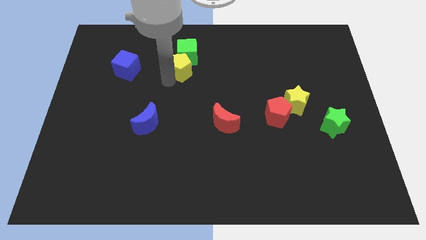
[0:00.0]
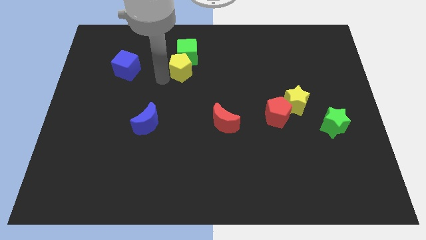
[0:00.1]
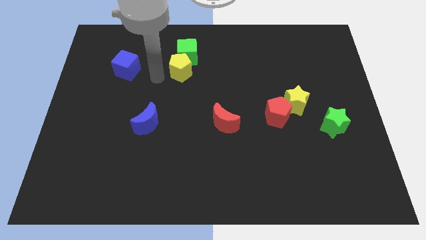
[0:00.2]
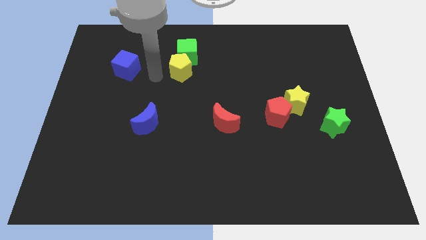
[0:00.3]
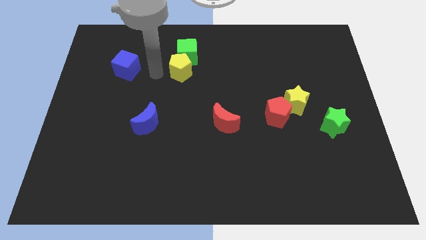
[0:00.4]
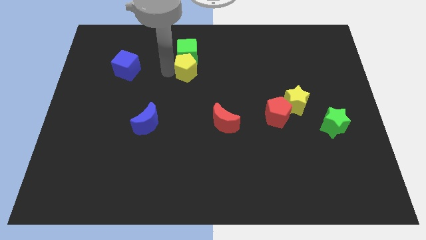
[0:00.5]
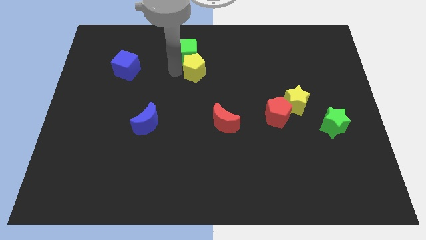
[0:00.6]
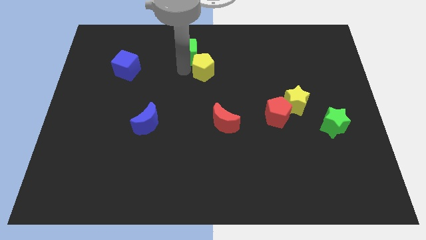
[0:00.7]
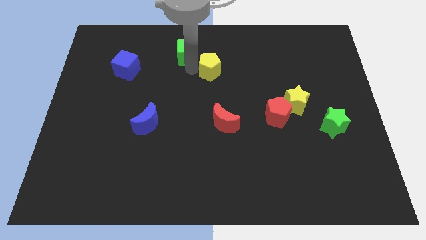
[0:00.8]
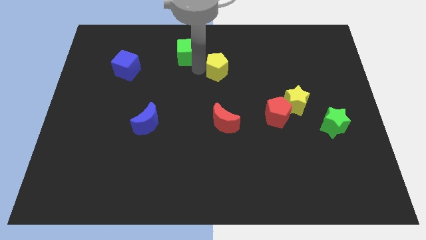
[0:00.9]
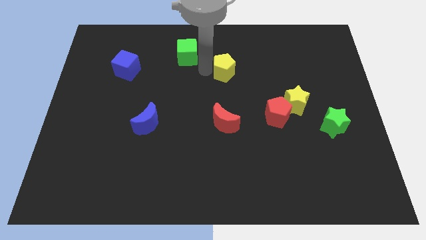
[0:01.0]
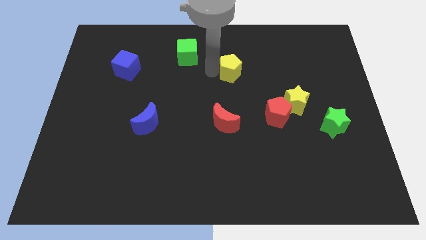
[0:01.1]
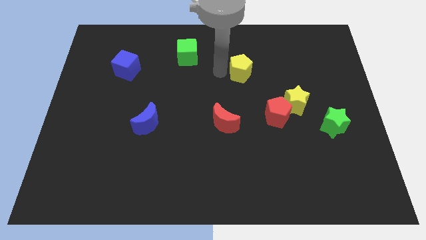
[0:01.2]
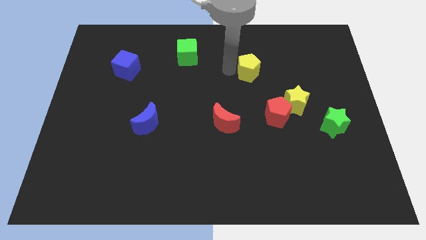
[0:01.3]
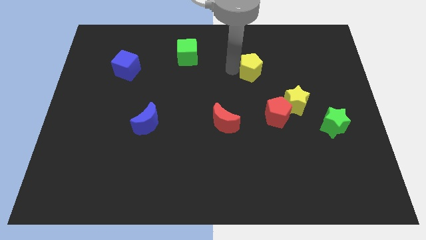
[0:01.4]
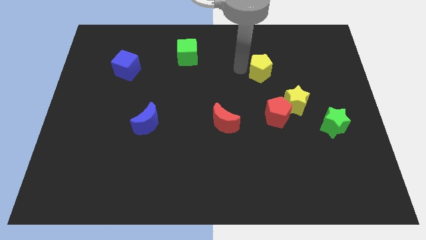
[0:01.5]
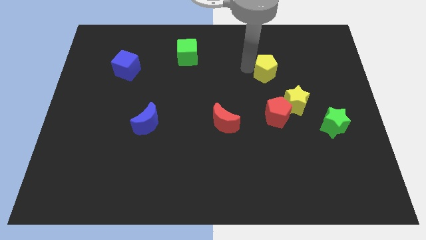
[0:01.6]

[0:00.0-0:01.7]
move the yellow pentagon to the top of the red pentagon

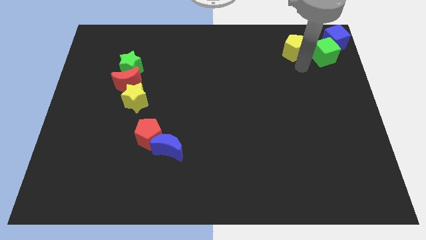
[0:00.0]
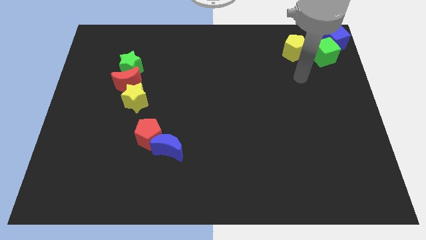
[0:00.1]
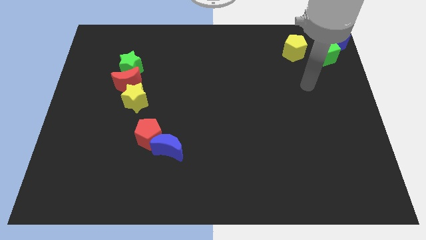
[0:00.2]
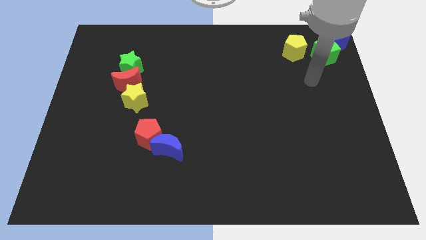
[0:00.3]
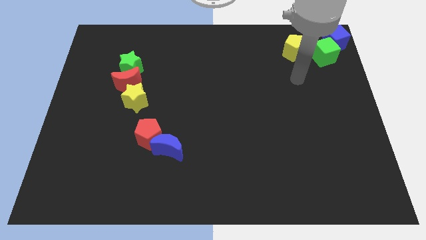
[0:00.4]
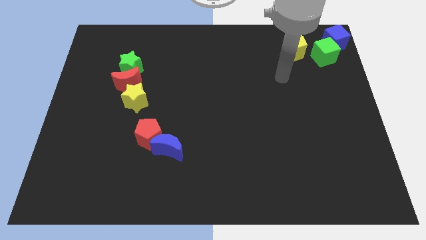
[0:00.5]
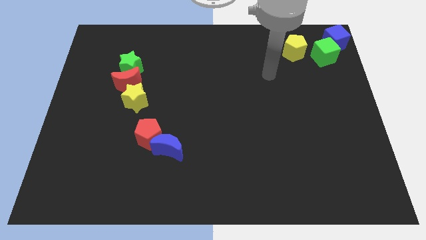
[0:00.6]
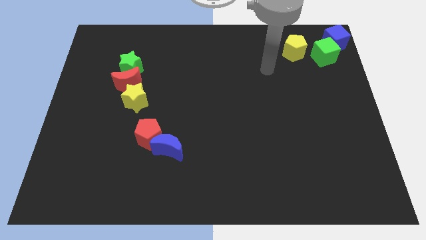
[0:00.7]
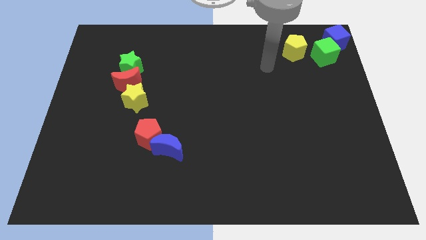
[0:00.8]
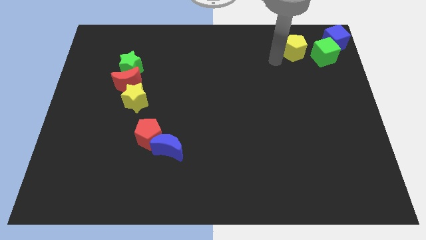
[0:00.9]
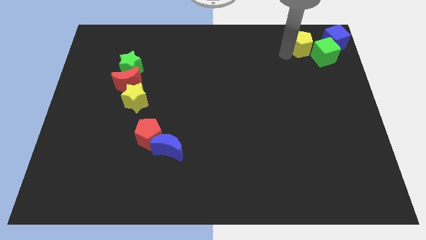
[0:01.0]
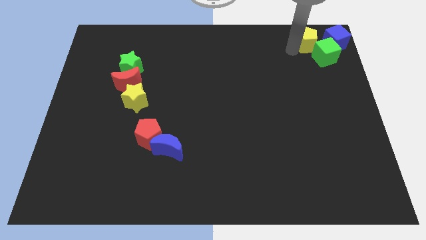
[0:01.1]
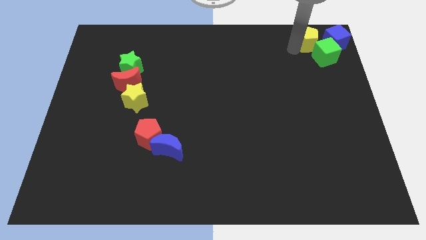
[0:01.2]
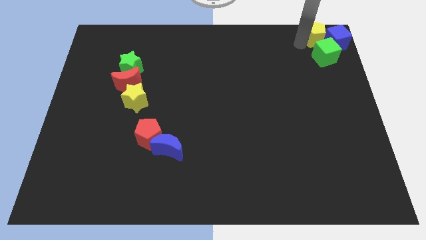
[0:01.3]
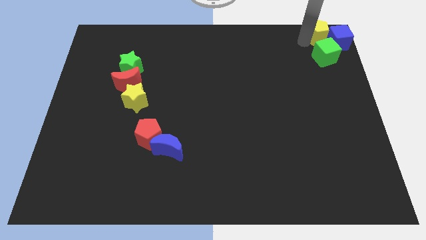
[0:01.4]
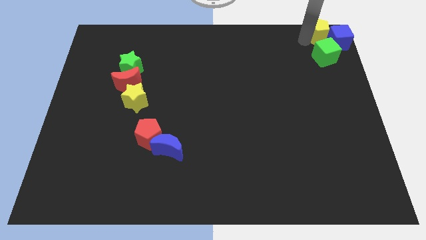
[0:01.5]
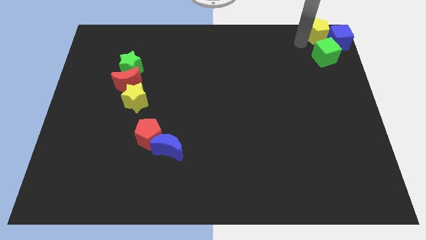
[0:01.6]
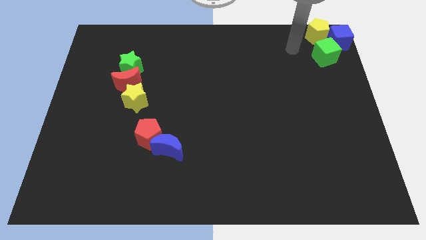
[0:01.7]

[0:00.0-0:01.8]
push the yellow pentagon to the top of the green cube

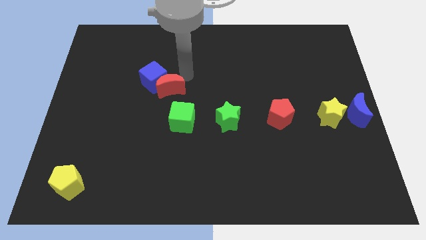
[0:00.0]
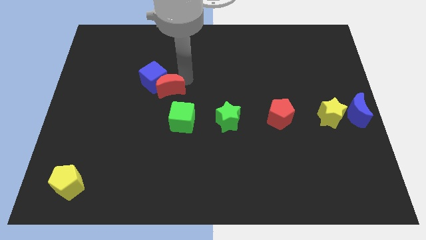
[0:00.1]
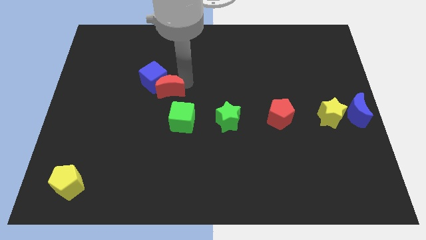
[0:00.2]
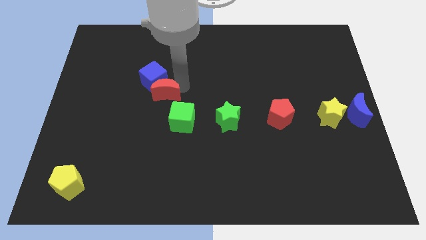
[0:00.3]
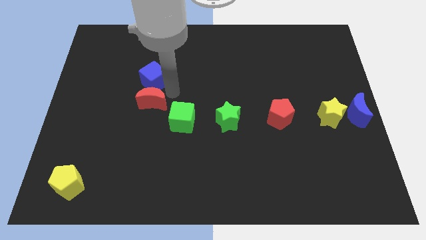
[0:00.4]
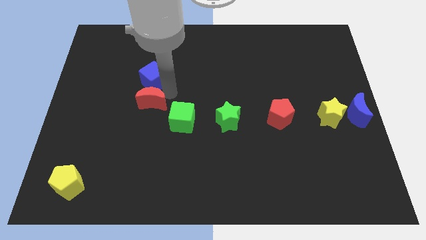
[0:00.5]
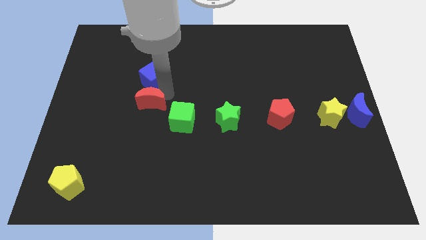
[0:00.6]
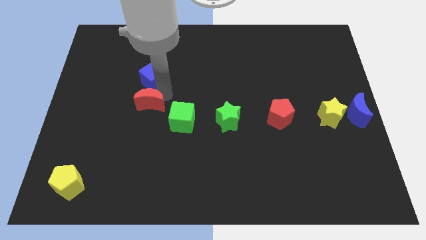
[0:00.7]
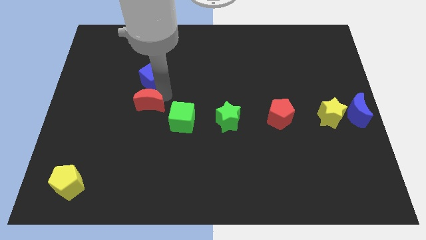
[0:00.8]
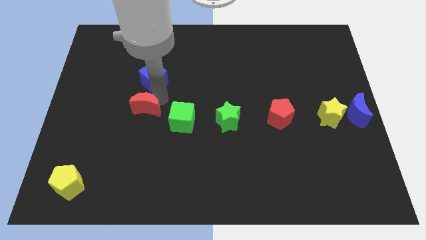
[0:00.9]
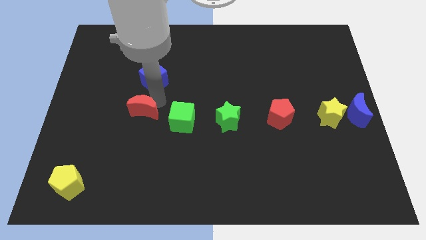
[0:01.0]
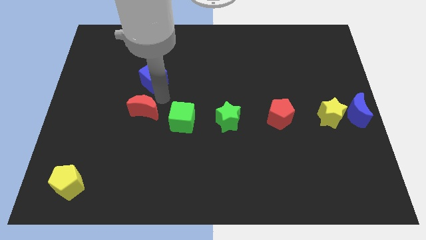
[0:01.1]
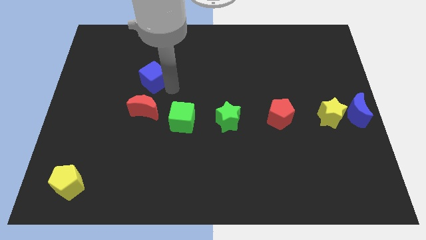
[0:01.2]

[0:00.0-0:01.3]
separate the red crescent from the blue cube

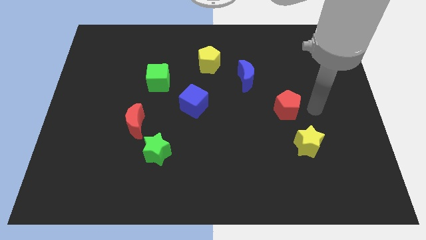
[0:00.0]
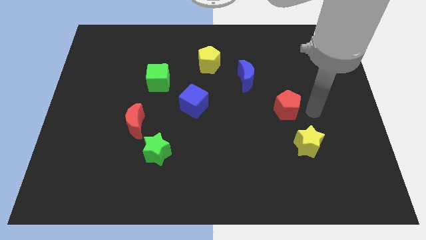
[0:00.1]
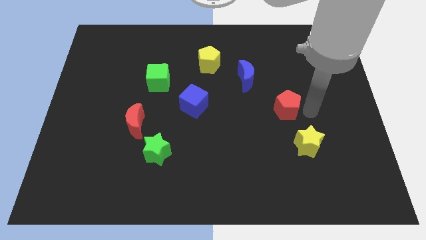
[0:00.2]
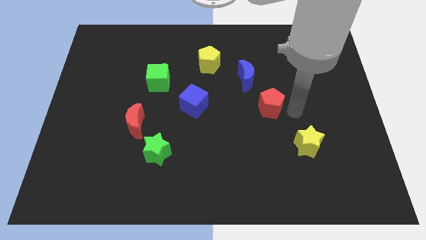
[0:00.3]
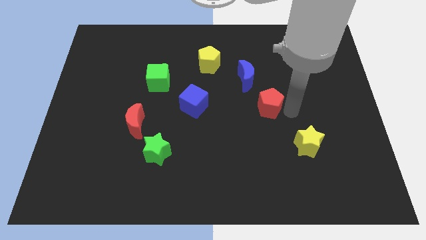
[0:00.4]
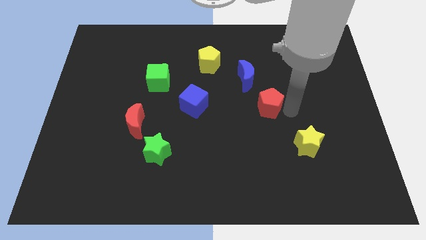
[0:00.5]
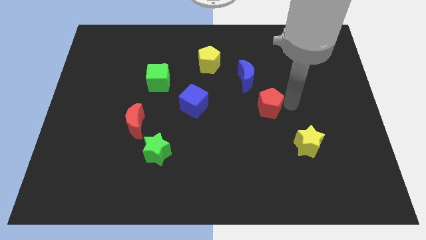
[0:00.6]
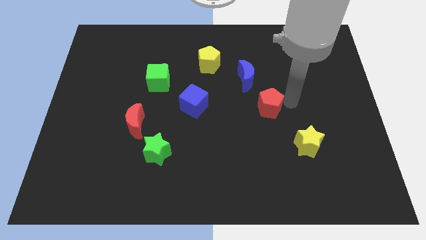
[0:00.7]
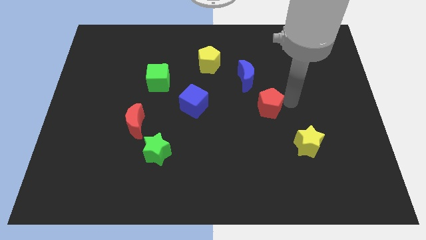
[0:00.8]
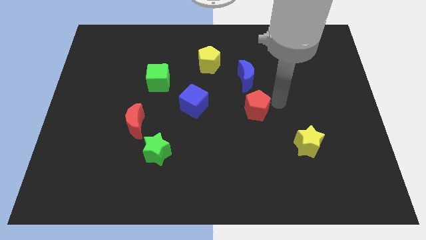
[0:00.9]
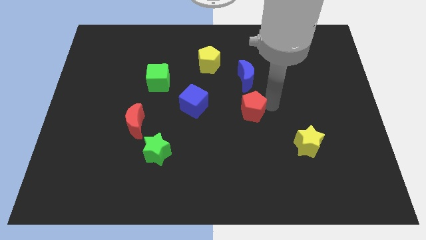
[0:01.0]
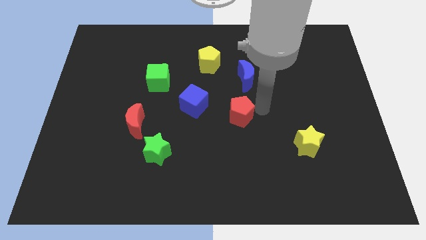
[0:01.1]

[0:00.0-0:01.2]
push the red pentagon to the bottom side of the blue moon

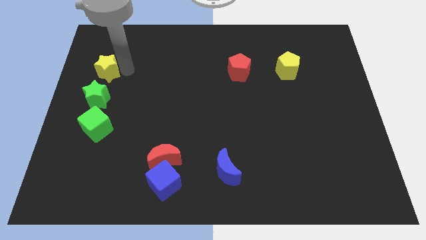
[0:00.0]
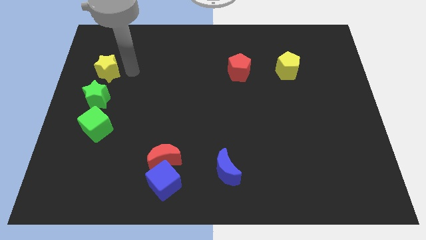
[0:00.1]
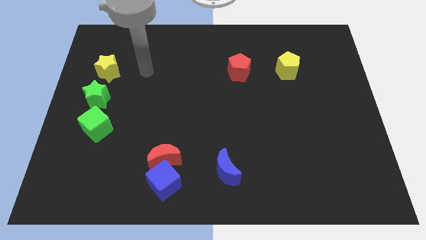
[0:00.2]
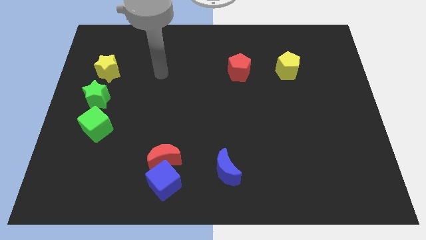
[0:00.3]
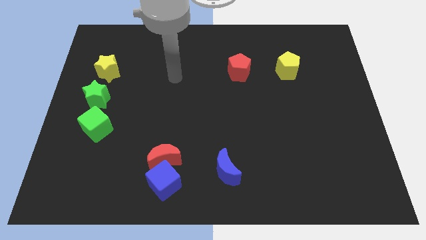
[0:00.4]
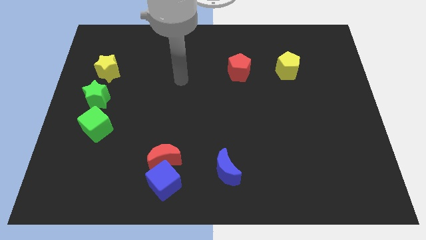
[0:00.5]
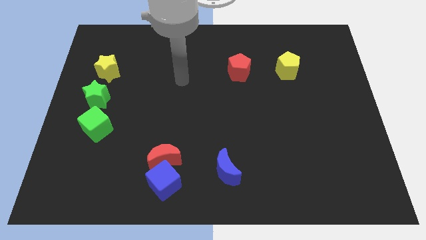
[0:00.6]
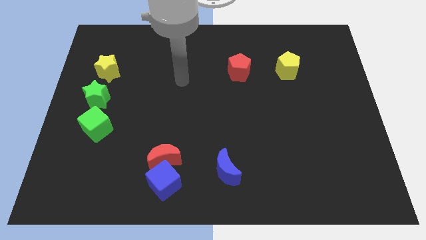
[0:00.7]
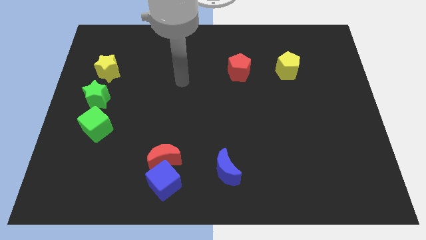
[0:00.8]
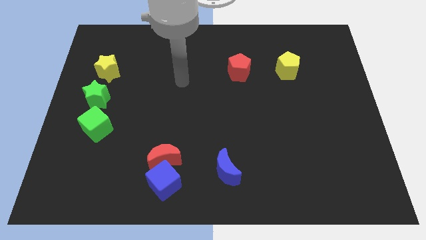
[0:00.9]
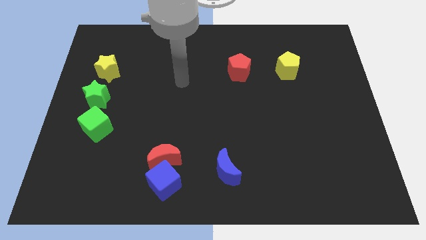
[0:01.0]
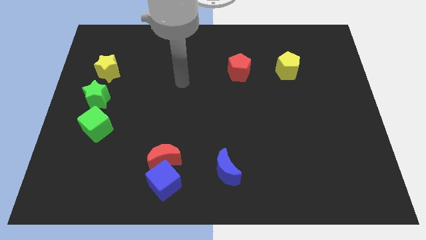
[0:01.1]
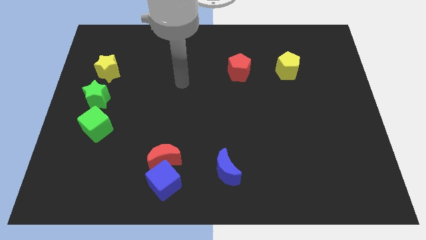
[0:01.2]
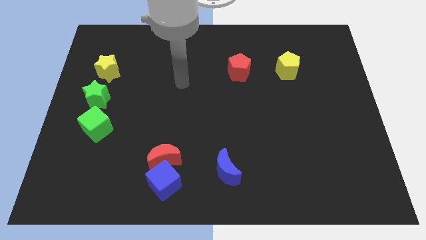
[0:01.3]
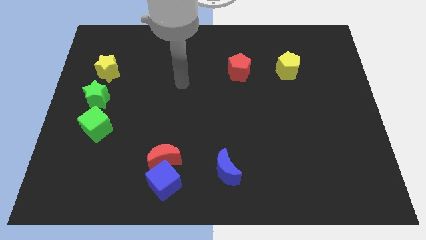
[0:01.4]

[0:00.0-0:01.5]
move your arm away from yellow star

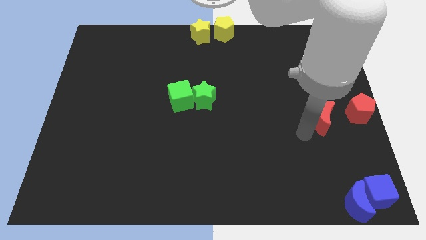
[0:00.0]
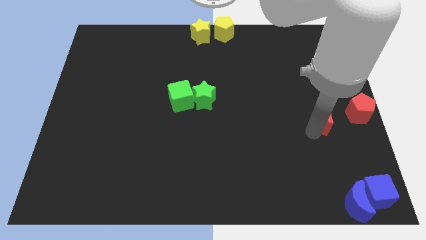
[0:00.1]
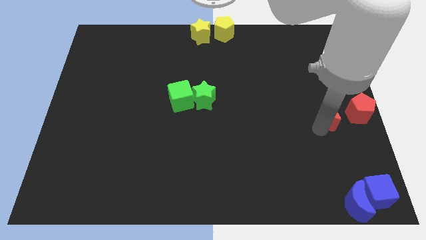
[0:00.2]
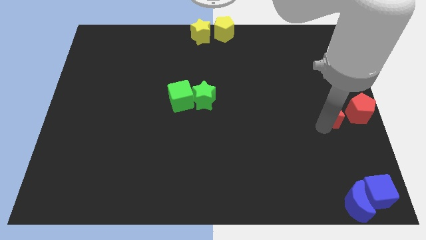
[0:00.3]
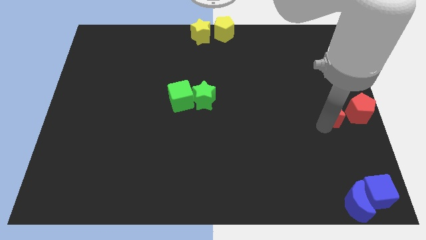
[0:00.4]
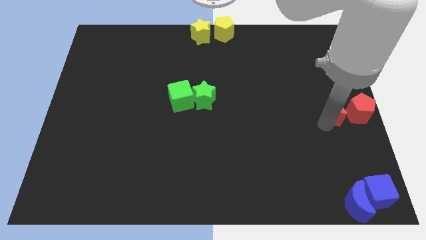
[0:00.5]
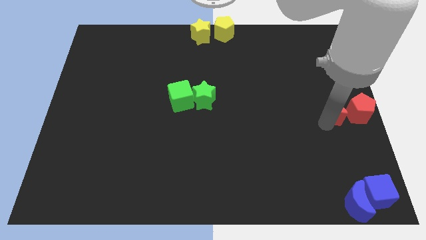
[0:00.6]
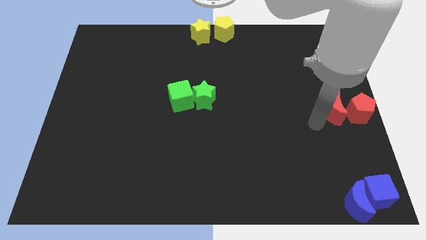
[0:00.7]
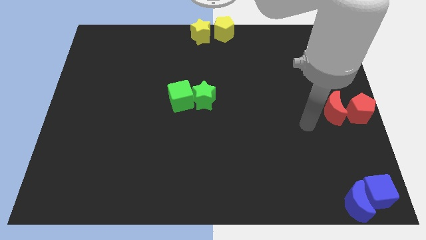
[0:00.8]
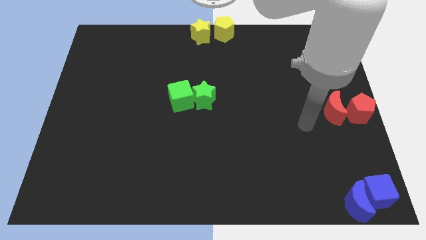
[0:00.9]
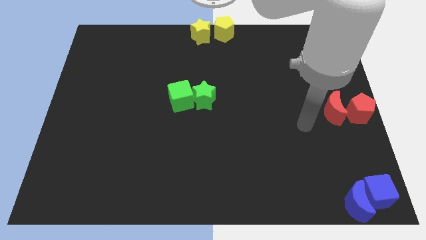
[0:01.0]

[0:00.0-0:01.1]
move the red moon slightly to the right side

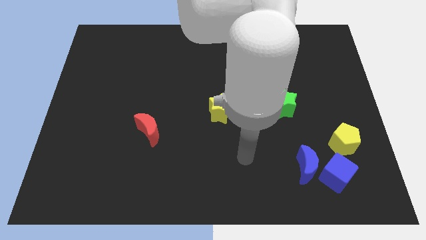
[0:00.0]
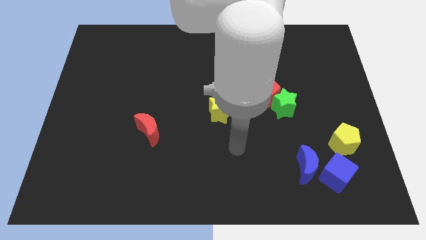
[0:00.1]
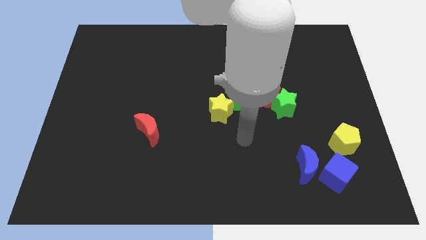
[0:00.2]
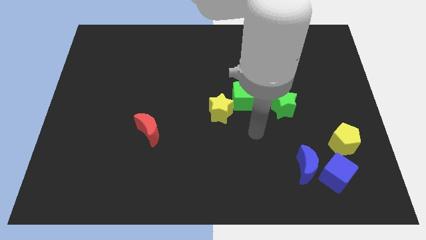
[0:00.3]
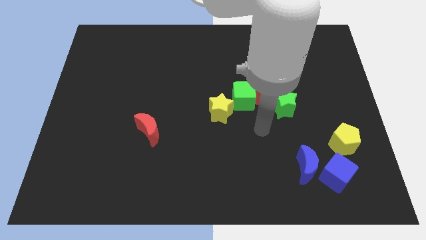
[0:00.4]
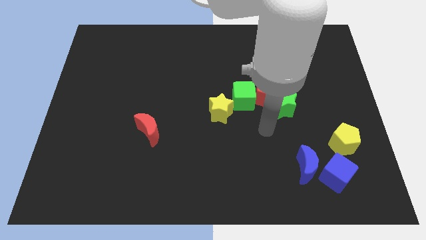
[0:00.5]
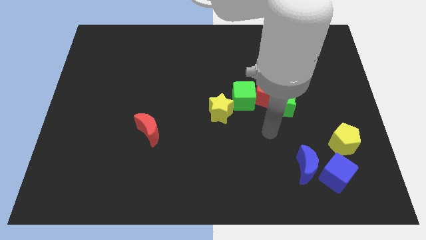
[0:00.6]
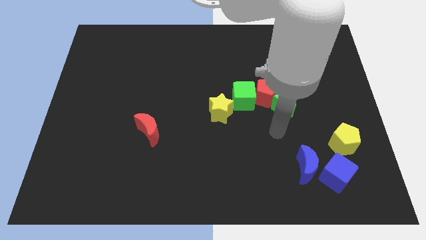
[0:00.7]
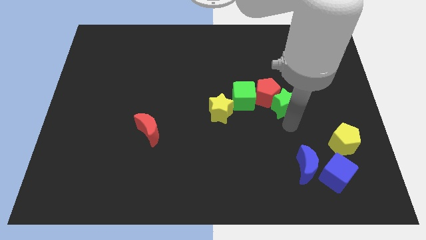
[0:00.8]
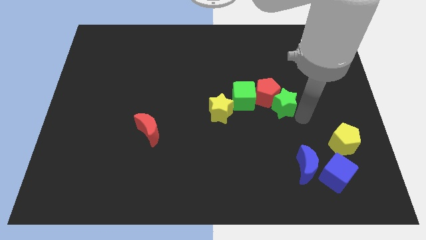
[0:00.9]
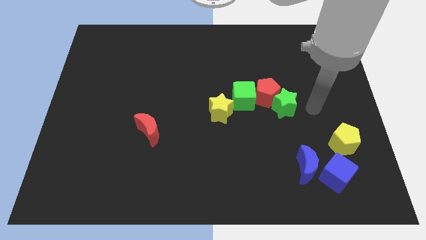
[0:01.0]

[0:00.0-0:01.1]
point your arm at the right of the green star
